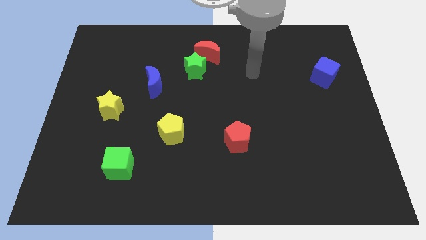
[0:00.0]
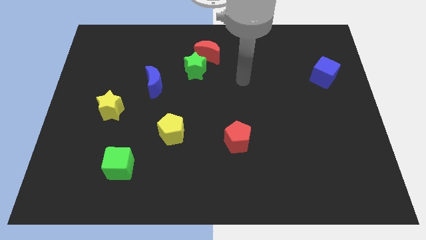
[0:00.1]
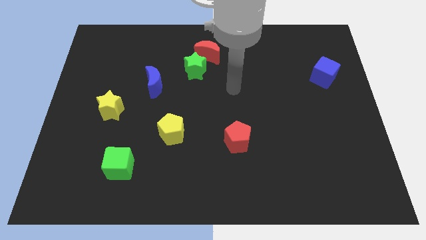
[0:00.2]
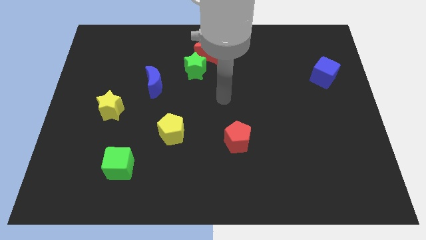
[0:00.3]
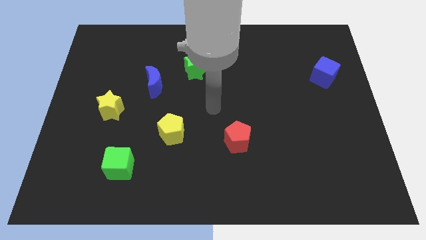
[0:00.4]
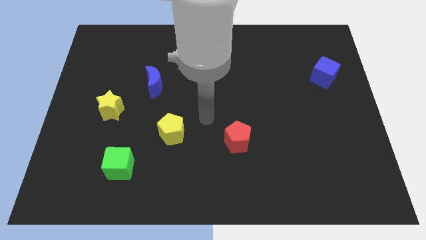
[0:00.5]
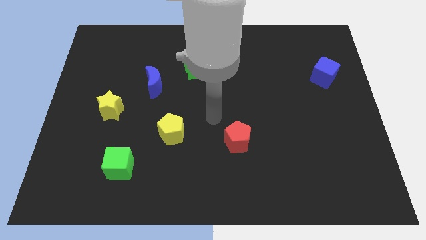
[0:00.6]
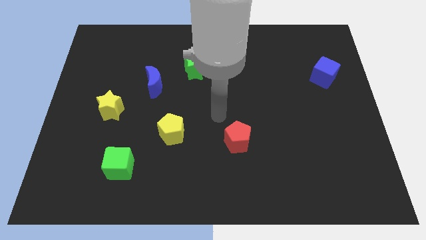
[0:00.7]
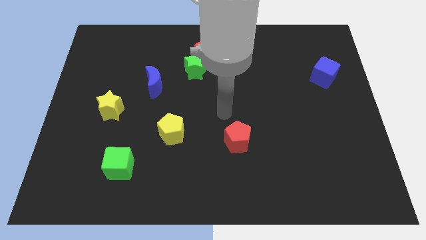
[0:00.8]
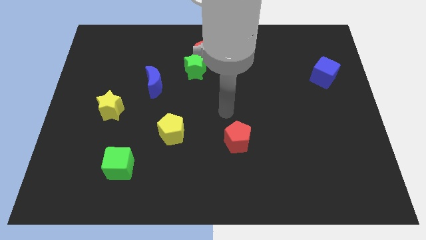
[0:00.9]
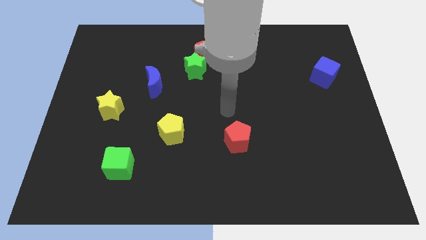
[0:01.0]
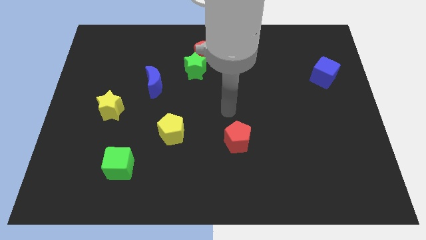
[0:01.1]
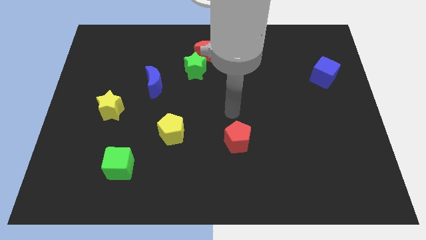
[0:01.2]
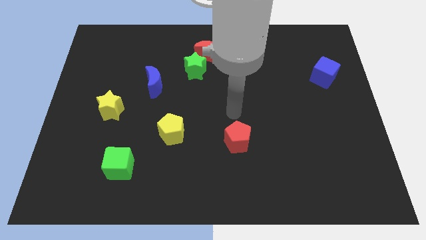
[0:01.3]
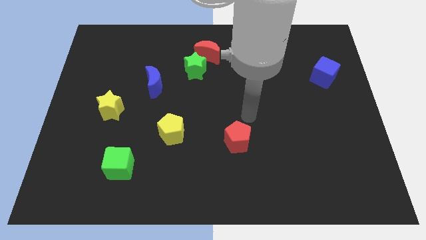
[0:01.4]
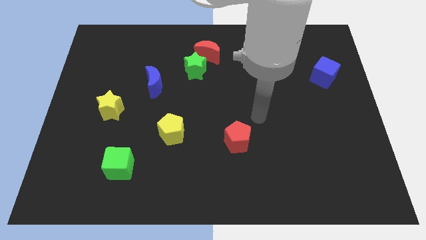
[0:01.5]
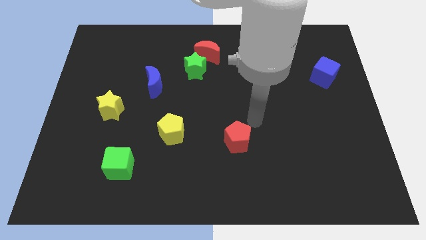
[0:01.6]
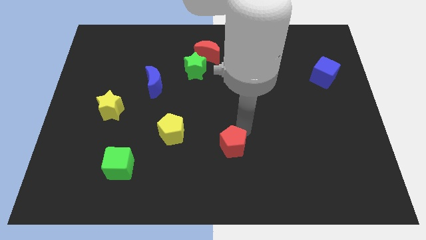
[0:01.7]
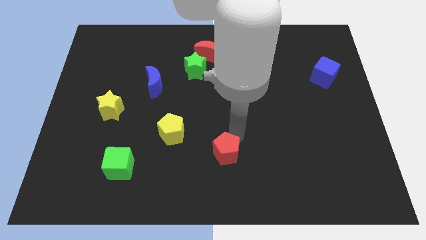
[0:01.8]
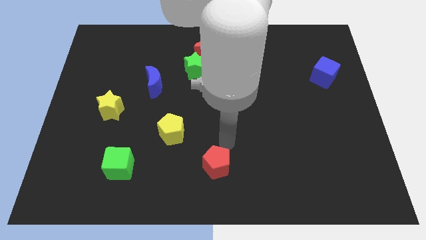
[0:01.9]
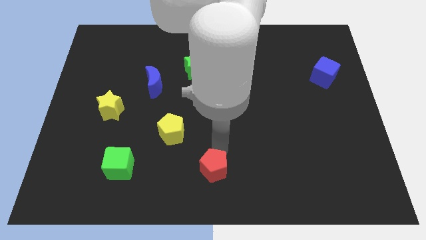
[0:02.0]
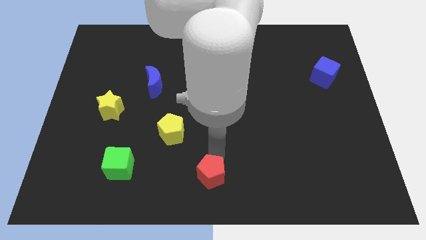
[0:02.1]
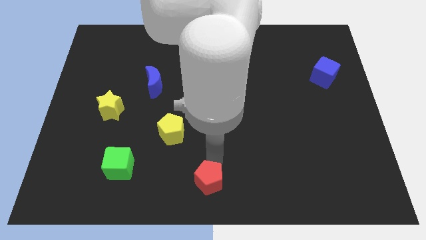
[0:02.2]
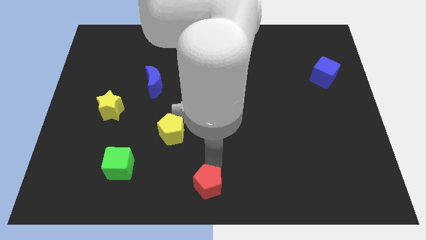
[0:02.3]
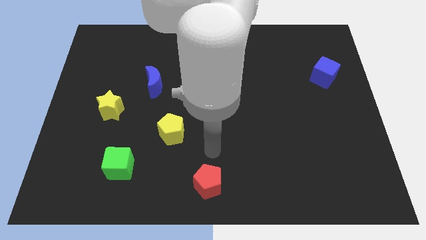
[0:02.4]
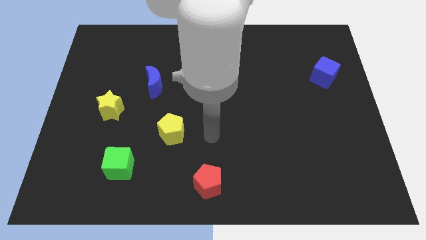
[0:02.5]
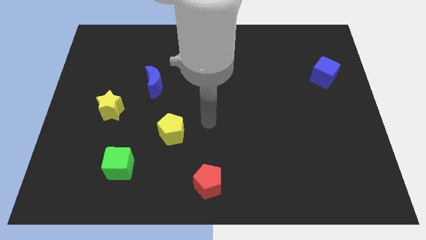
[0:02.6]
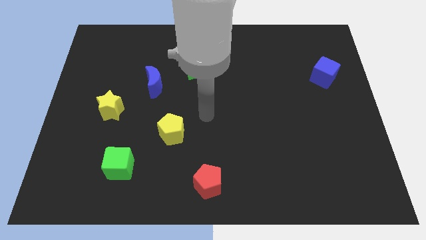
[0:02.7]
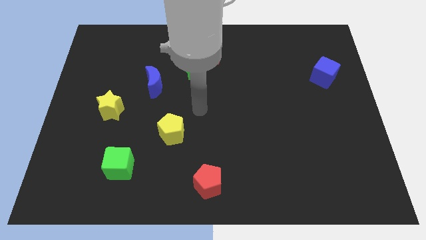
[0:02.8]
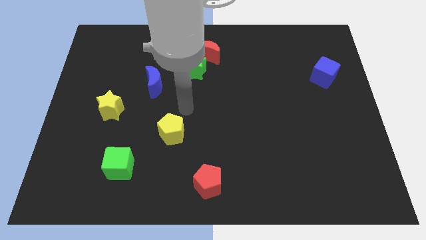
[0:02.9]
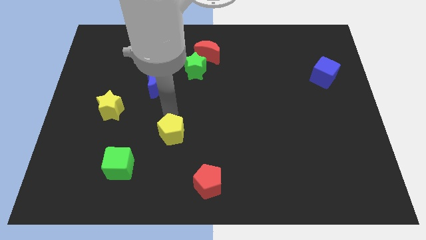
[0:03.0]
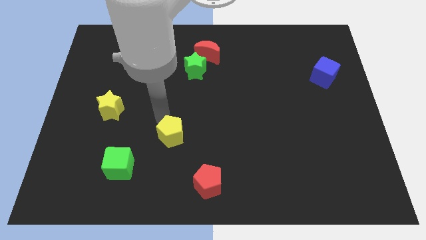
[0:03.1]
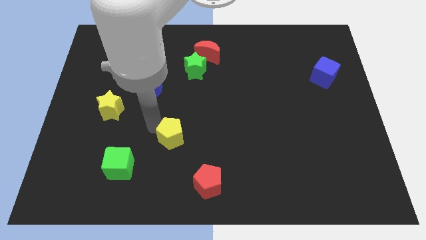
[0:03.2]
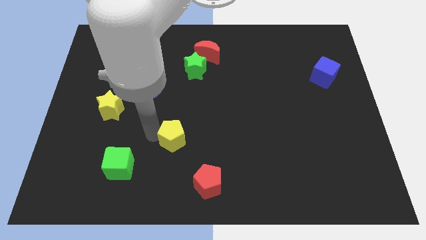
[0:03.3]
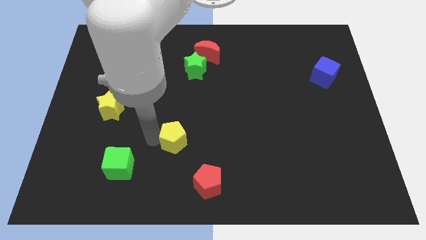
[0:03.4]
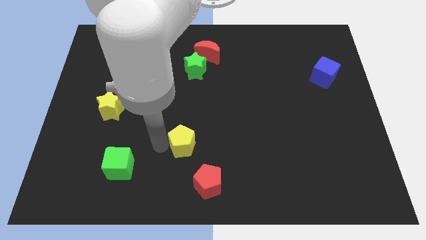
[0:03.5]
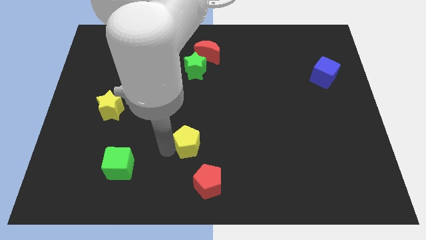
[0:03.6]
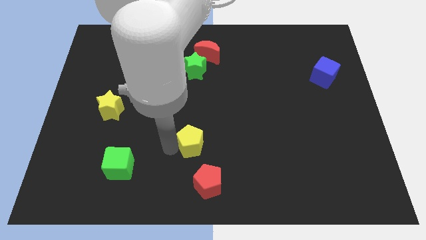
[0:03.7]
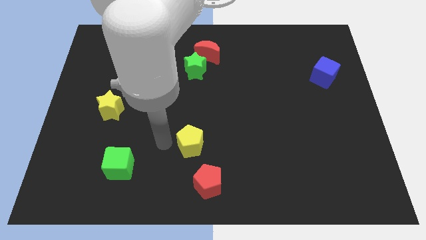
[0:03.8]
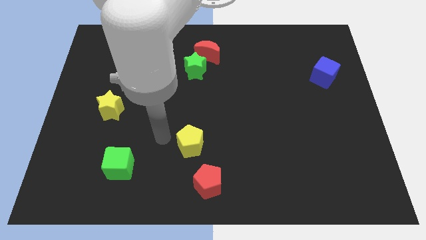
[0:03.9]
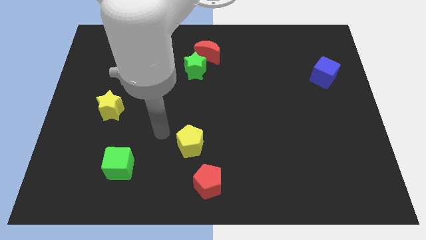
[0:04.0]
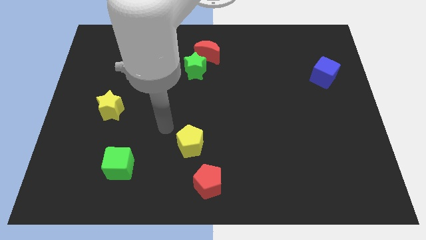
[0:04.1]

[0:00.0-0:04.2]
move the pentagons to the bottom of the board

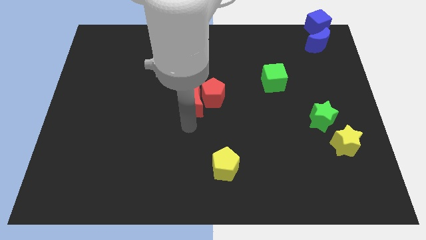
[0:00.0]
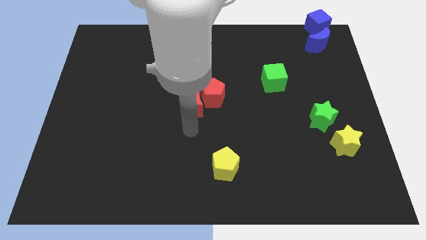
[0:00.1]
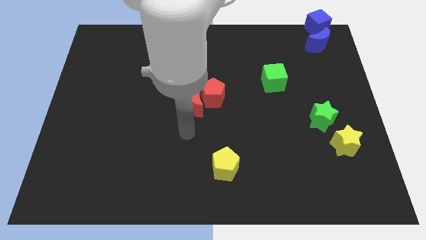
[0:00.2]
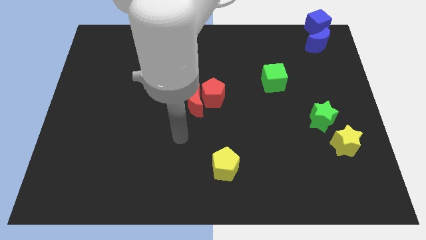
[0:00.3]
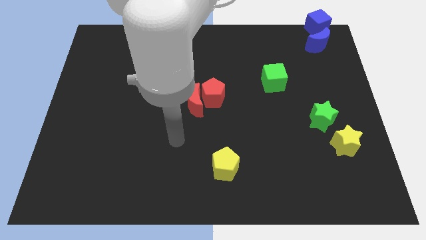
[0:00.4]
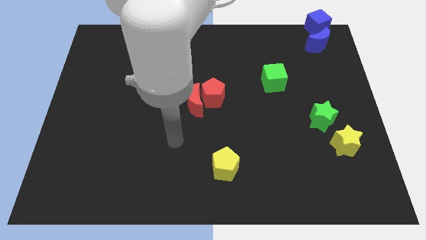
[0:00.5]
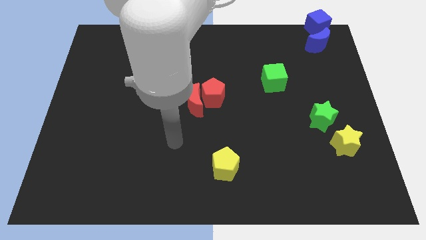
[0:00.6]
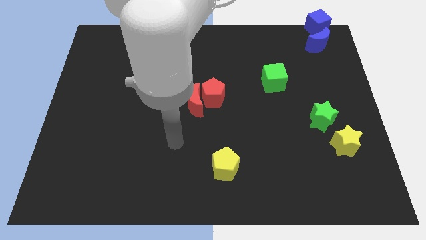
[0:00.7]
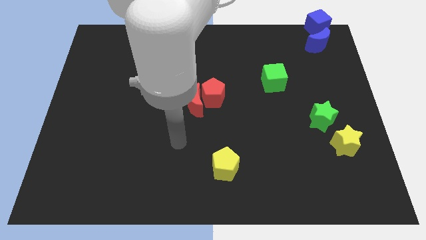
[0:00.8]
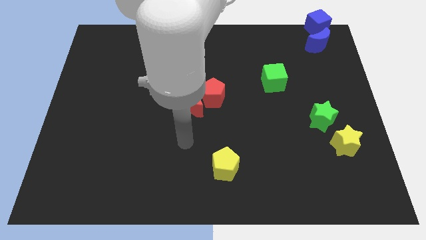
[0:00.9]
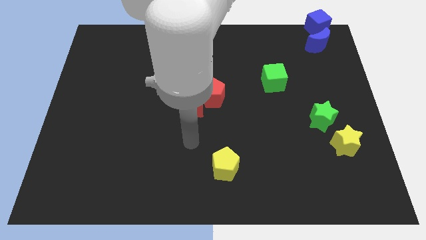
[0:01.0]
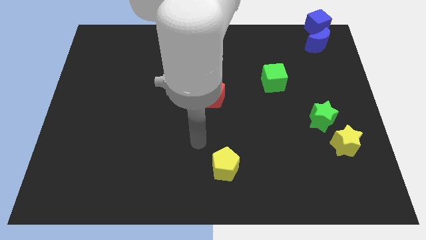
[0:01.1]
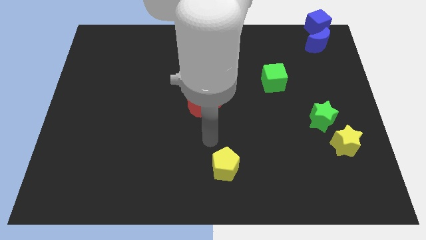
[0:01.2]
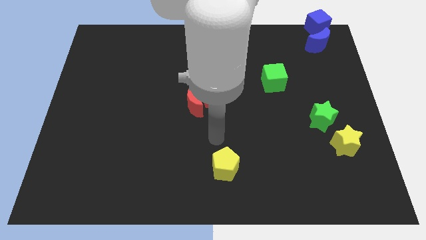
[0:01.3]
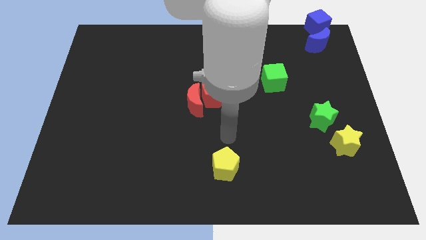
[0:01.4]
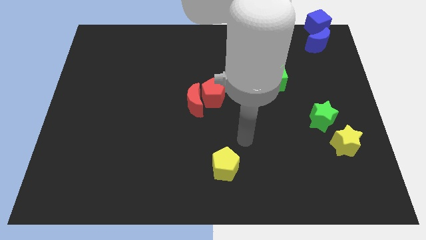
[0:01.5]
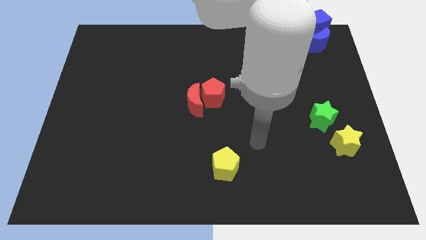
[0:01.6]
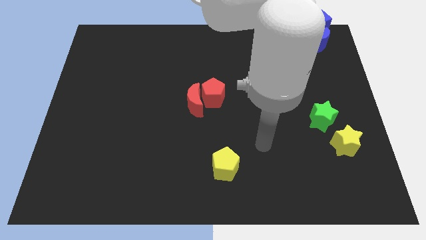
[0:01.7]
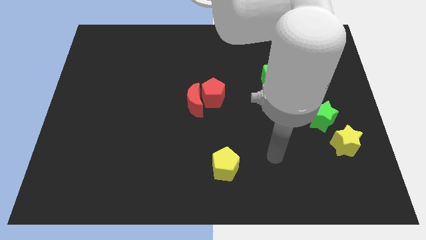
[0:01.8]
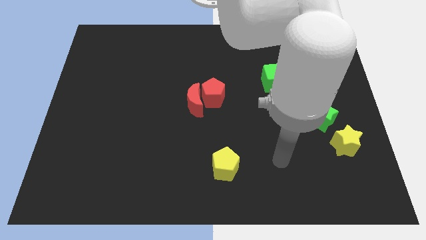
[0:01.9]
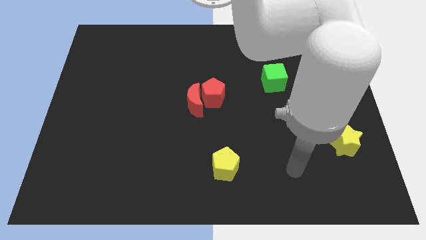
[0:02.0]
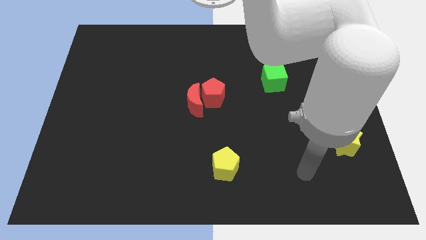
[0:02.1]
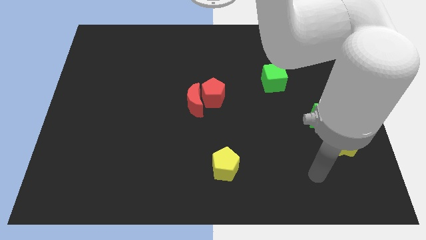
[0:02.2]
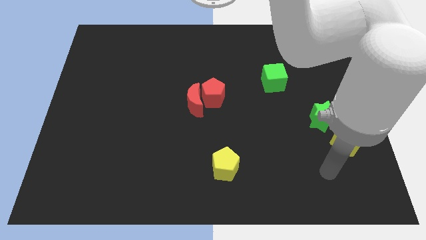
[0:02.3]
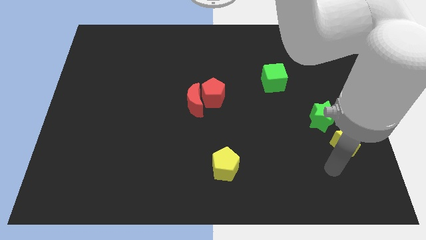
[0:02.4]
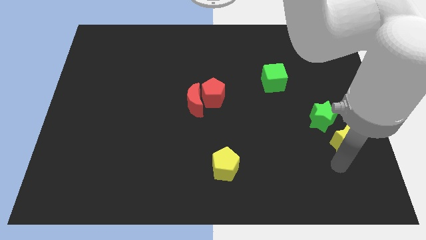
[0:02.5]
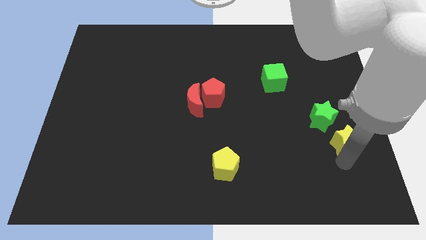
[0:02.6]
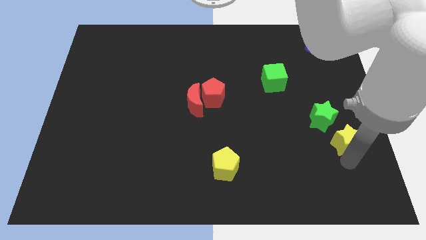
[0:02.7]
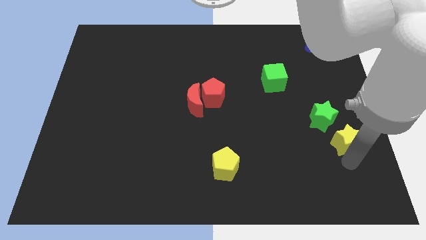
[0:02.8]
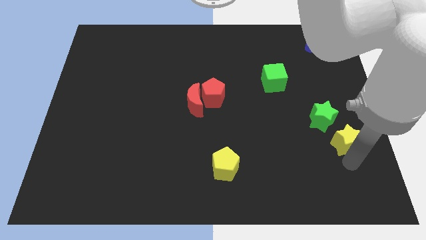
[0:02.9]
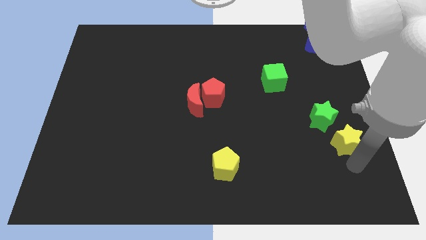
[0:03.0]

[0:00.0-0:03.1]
place your arm below yellow star

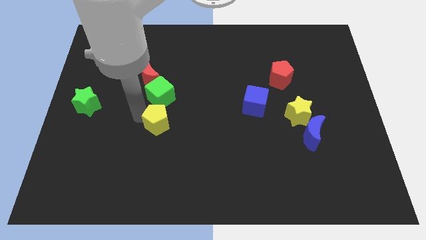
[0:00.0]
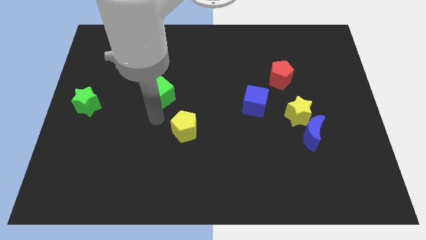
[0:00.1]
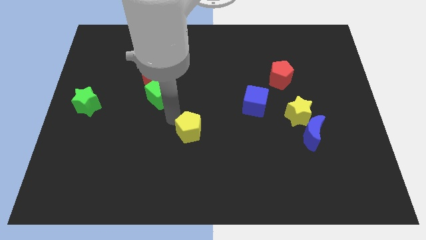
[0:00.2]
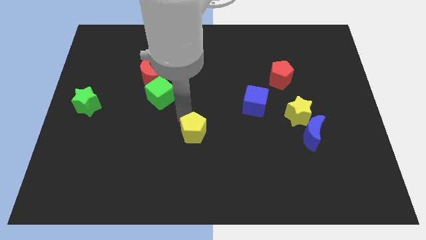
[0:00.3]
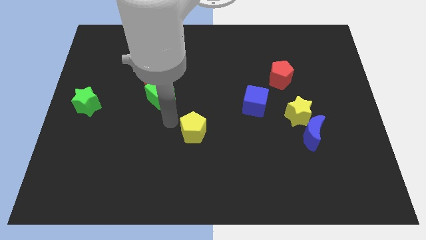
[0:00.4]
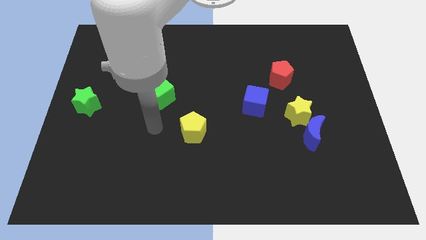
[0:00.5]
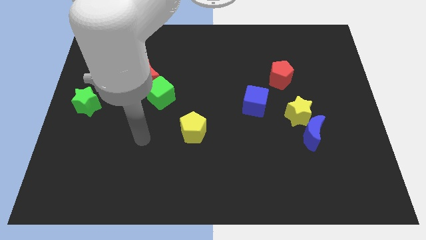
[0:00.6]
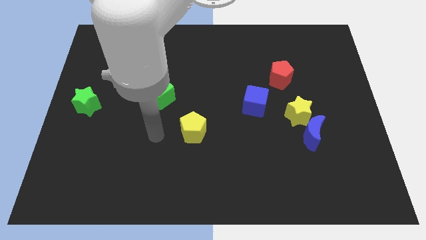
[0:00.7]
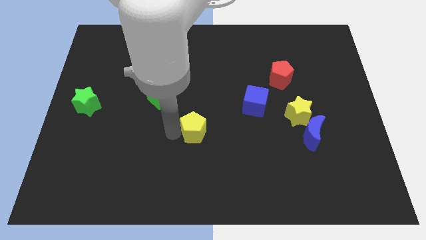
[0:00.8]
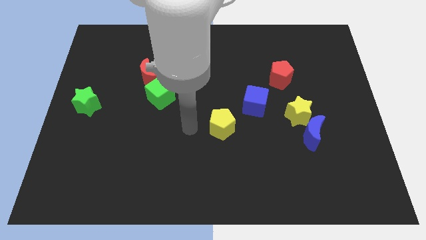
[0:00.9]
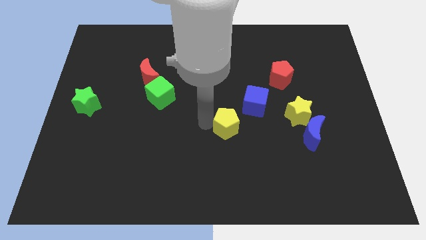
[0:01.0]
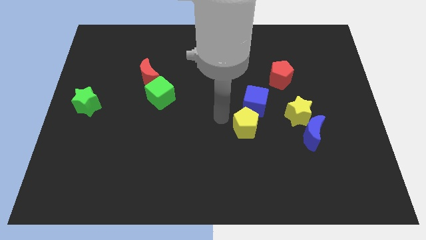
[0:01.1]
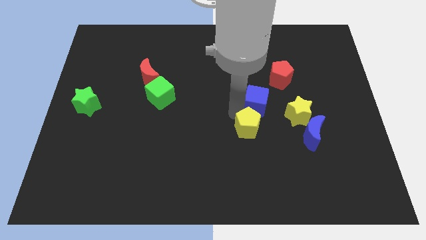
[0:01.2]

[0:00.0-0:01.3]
bring the yellow pentagon to the bottom side of the blue cube
